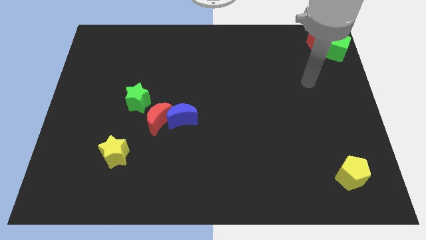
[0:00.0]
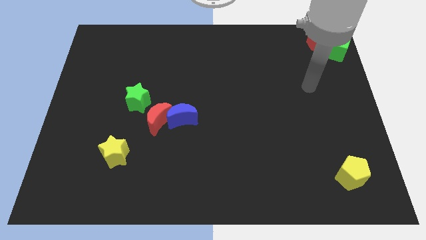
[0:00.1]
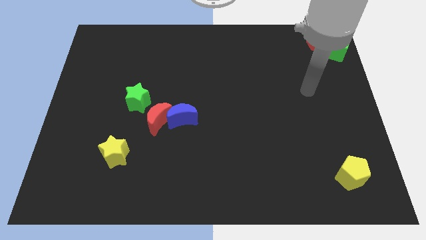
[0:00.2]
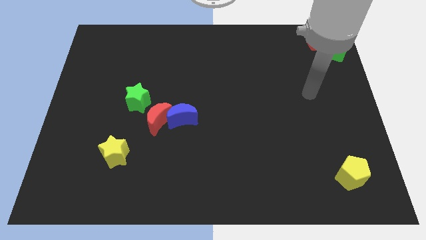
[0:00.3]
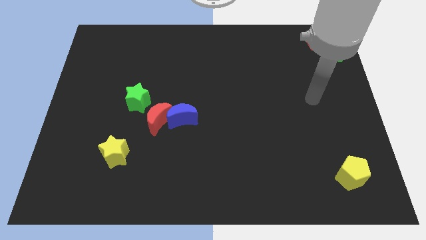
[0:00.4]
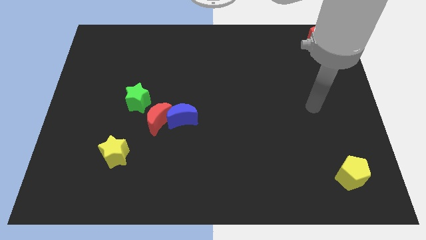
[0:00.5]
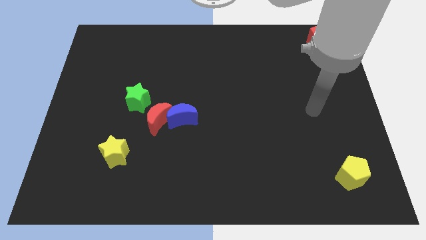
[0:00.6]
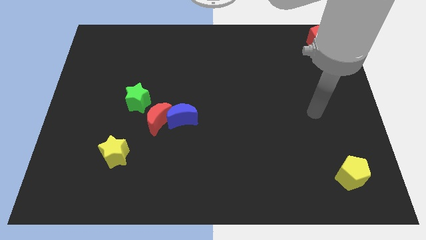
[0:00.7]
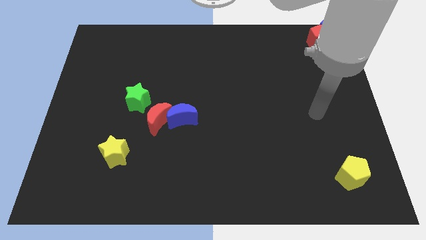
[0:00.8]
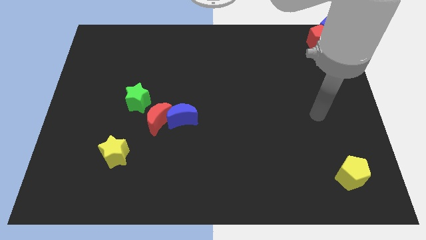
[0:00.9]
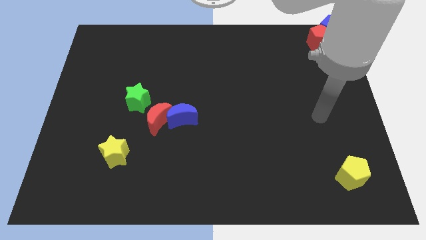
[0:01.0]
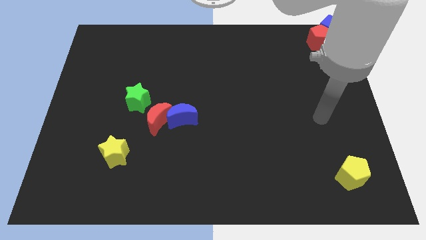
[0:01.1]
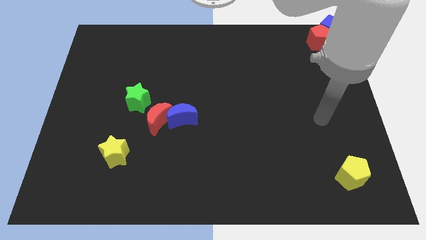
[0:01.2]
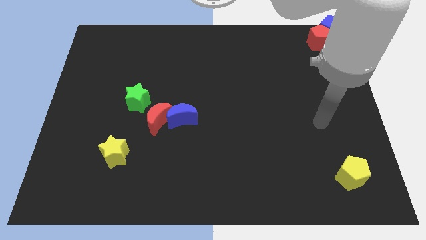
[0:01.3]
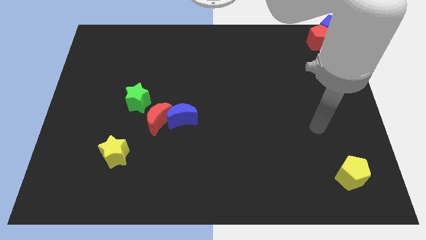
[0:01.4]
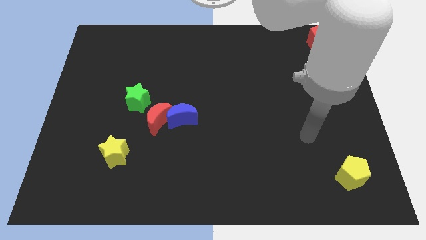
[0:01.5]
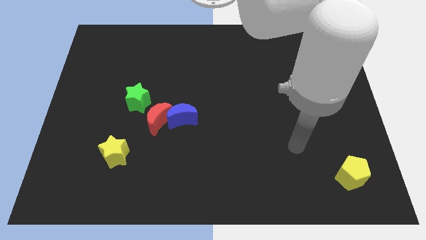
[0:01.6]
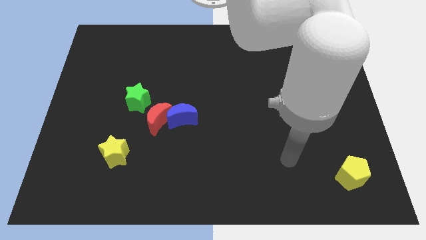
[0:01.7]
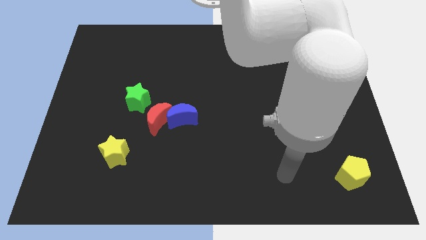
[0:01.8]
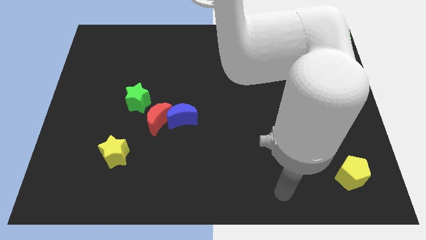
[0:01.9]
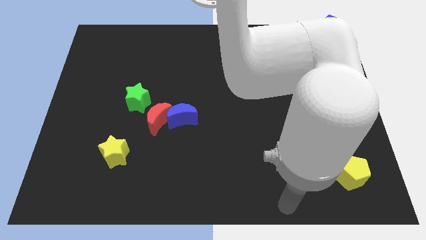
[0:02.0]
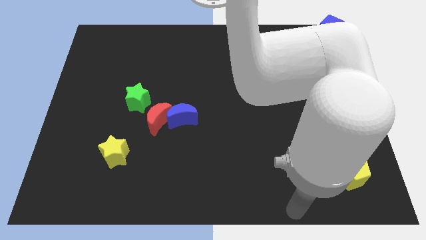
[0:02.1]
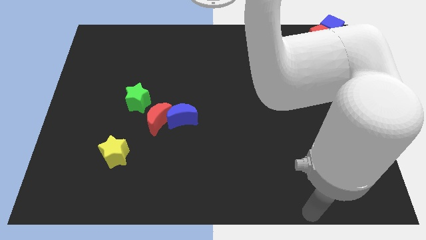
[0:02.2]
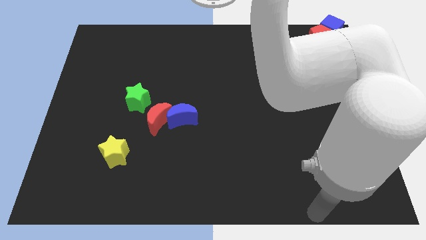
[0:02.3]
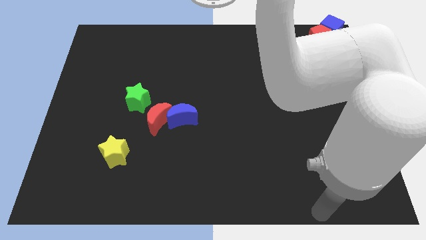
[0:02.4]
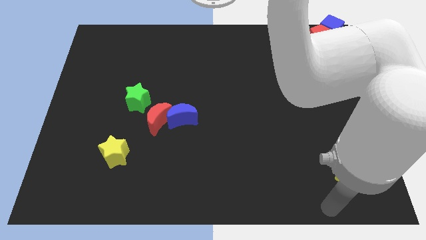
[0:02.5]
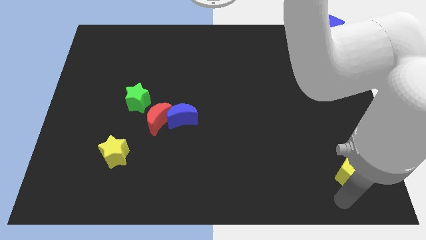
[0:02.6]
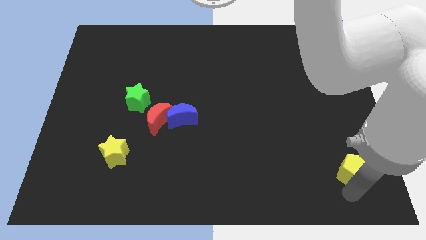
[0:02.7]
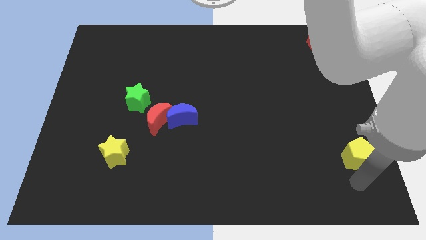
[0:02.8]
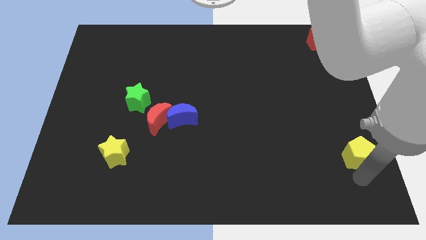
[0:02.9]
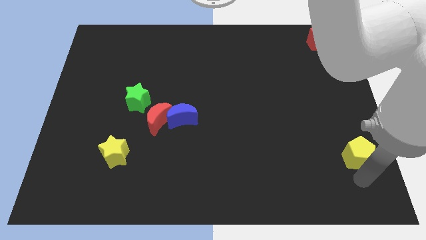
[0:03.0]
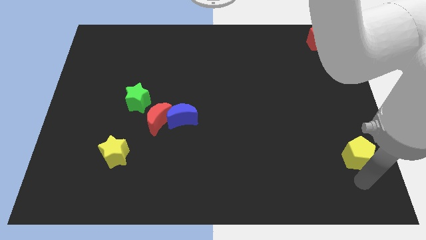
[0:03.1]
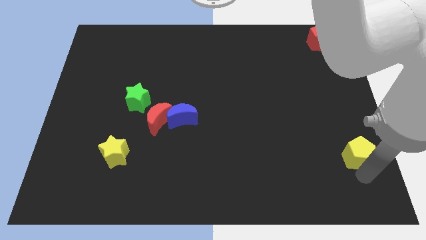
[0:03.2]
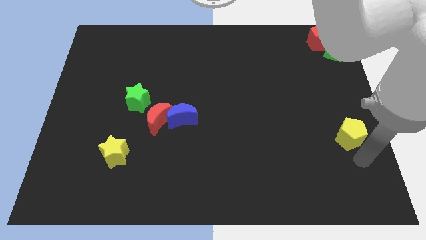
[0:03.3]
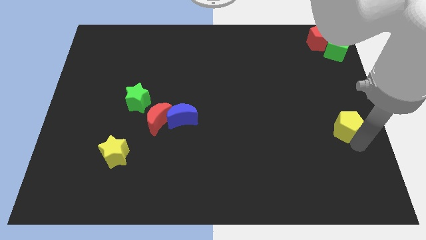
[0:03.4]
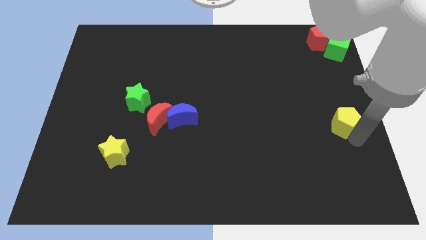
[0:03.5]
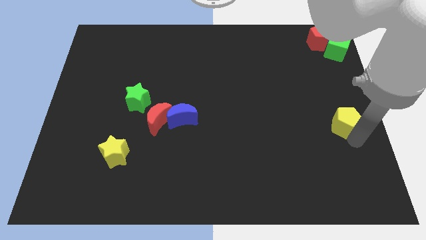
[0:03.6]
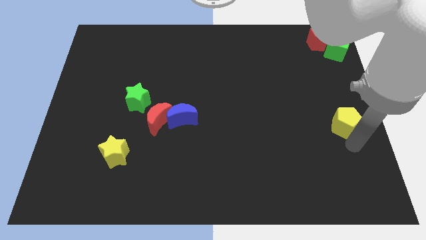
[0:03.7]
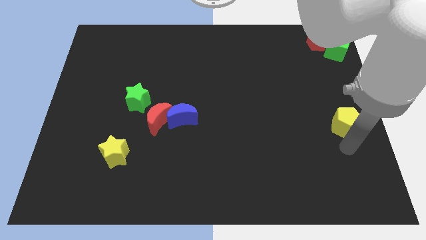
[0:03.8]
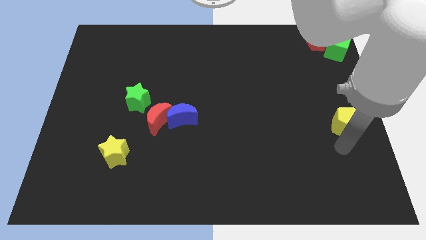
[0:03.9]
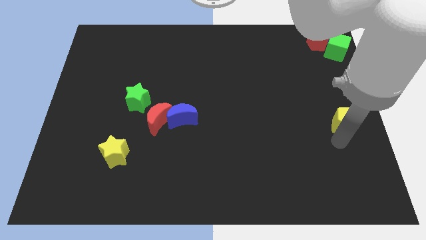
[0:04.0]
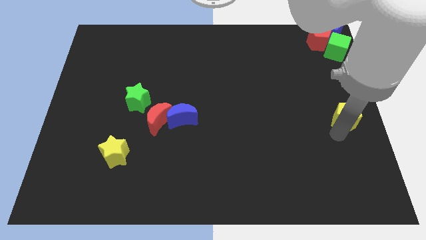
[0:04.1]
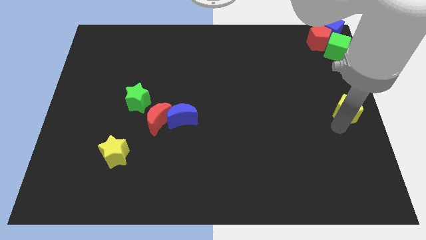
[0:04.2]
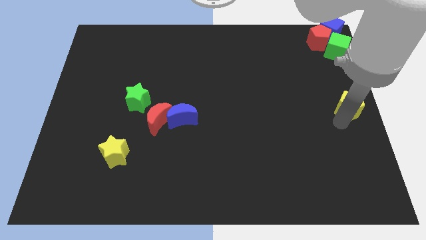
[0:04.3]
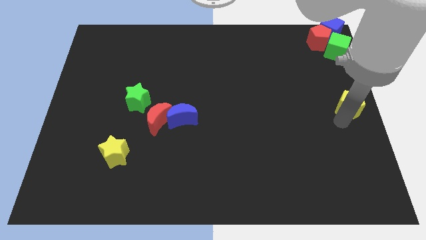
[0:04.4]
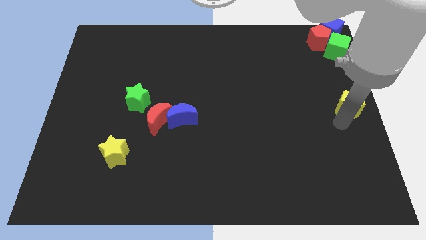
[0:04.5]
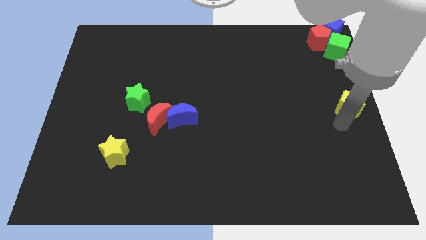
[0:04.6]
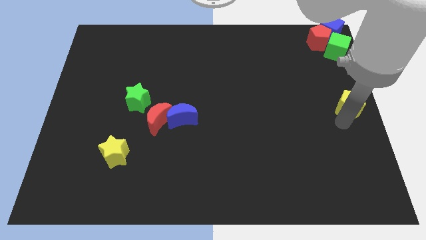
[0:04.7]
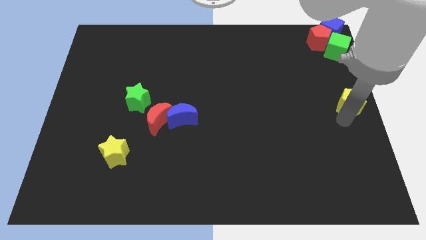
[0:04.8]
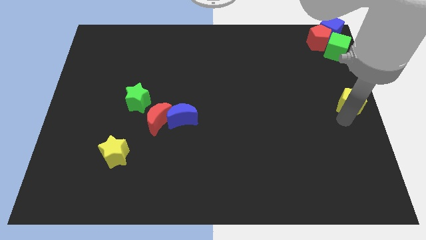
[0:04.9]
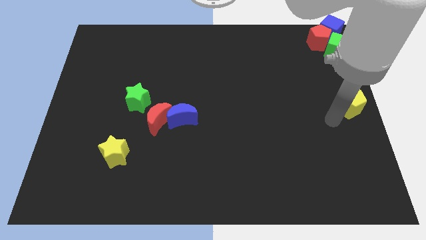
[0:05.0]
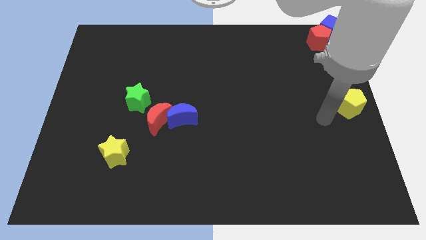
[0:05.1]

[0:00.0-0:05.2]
move yellow pentagon right center of the board

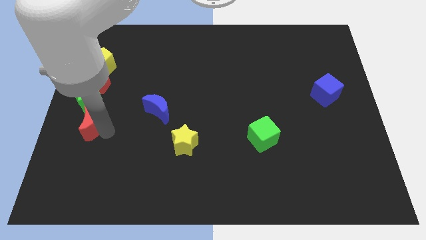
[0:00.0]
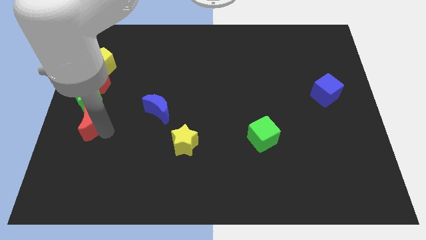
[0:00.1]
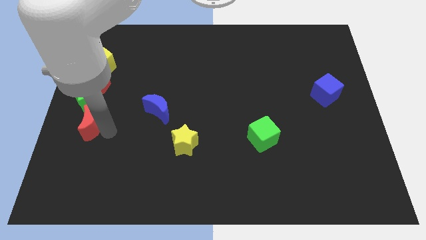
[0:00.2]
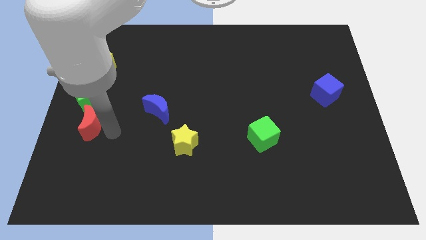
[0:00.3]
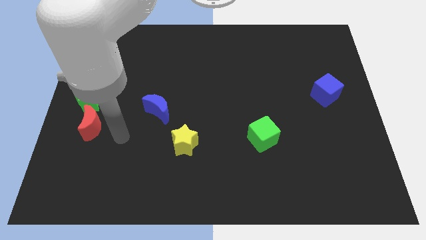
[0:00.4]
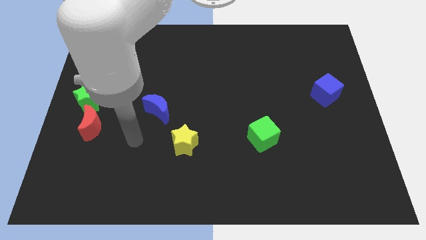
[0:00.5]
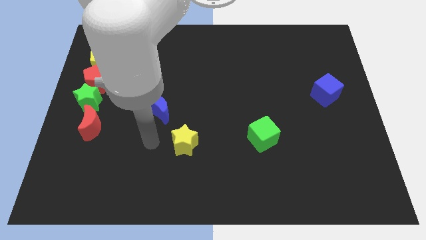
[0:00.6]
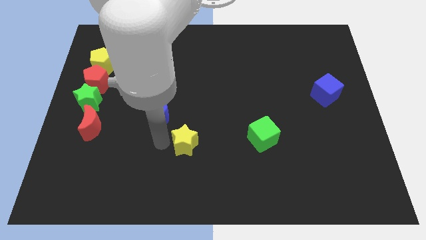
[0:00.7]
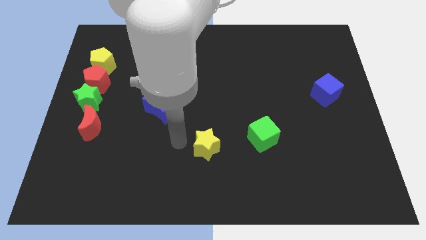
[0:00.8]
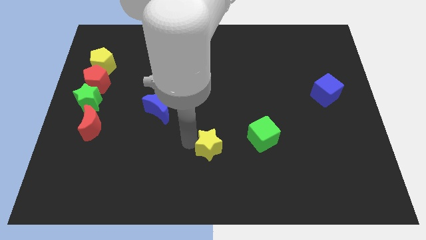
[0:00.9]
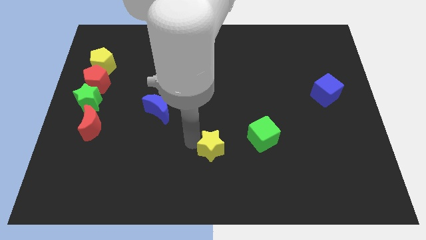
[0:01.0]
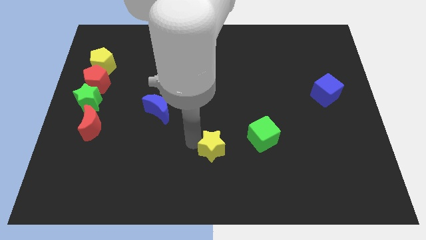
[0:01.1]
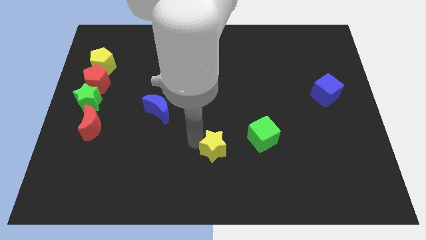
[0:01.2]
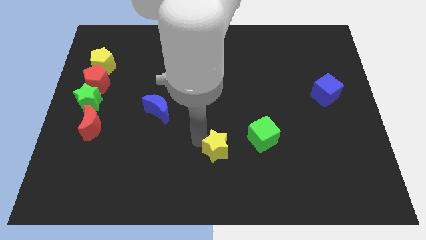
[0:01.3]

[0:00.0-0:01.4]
push the red moon to the bottom of the green star

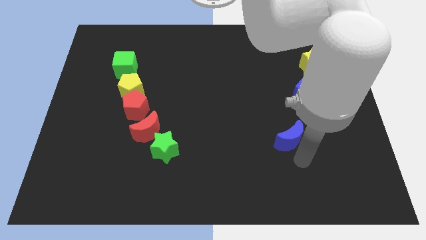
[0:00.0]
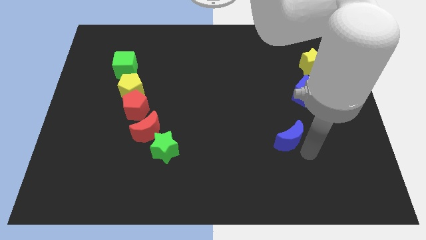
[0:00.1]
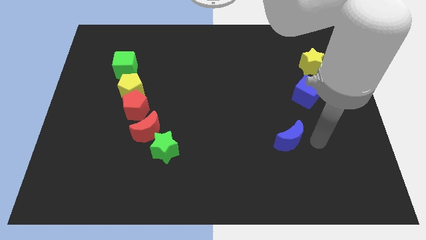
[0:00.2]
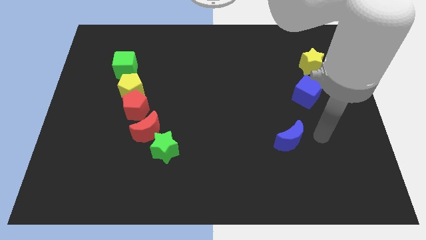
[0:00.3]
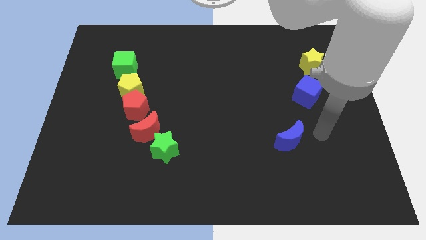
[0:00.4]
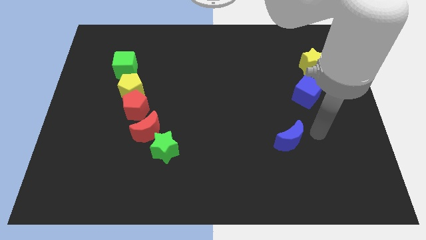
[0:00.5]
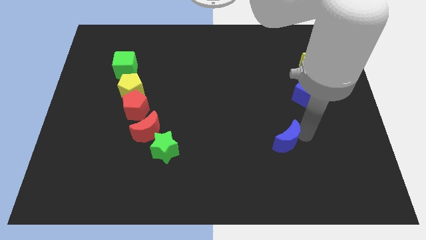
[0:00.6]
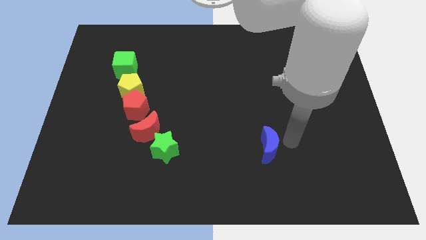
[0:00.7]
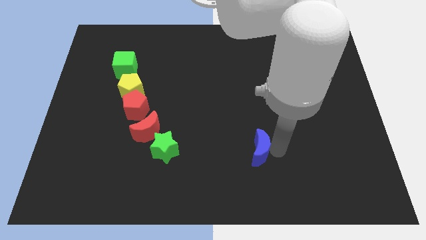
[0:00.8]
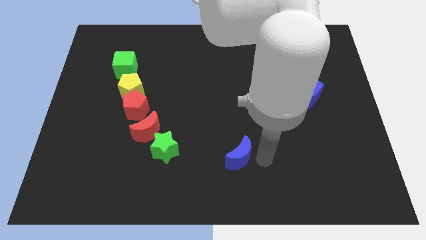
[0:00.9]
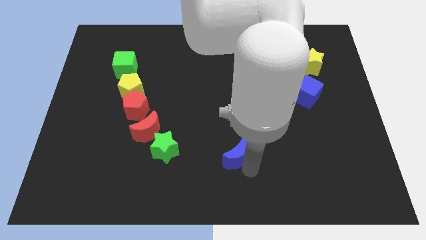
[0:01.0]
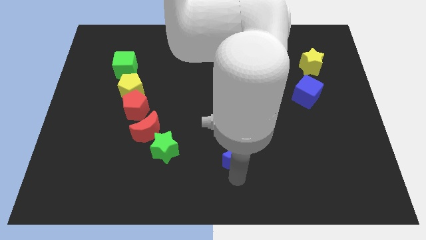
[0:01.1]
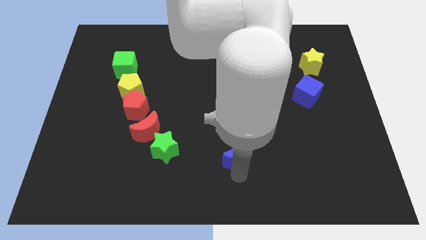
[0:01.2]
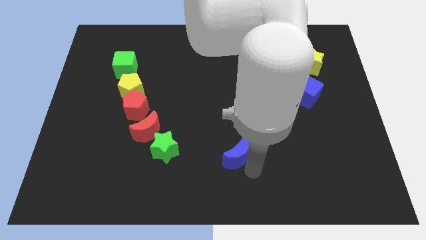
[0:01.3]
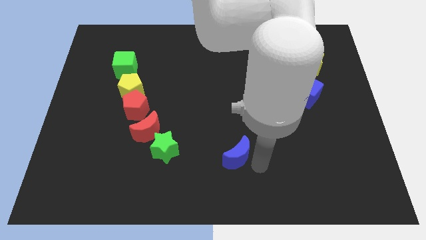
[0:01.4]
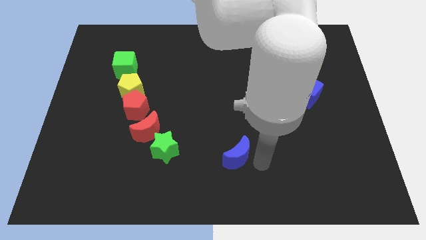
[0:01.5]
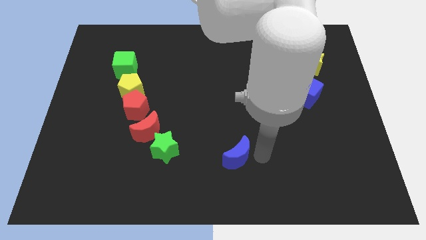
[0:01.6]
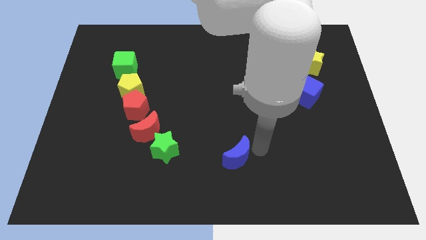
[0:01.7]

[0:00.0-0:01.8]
push blue crescent slightly towards left side

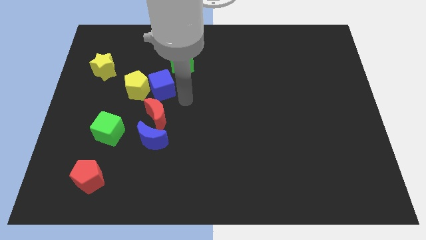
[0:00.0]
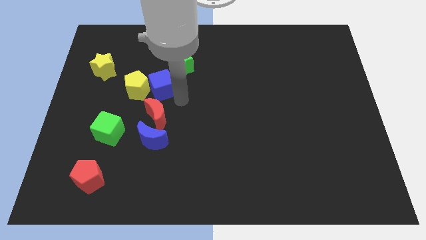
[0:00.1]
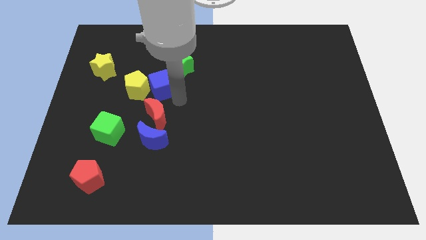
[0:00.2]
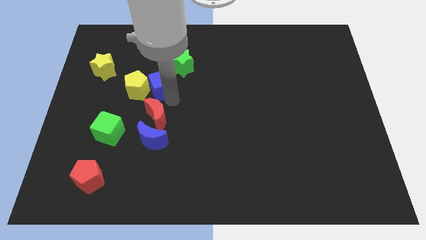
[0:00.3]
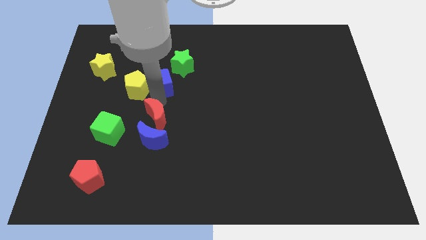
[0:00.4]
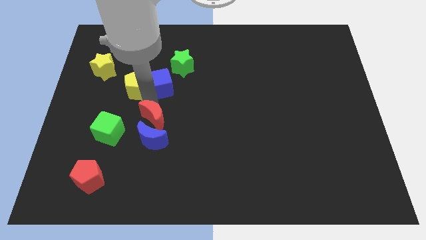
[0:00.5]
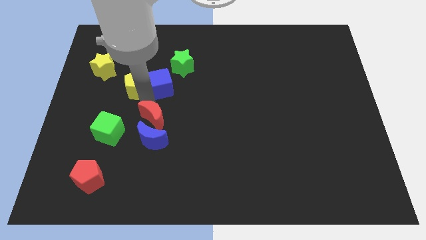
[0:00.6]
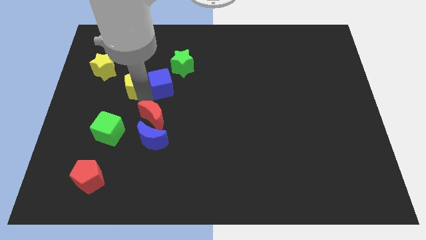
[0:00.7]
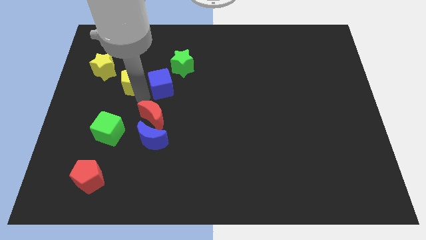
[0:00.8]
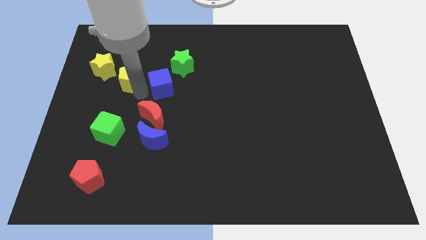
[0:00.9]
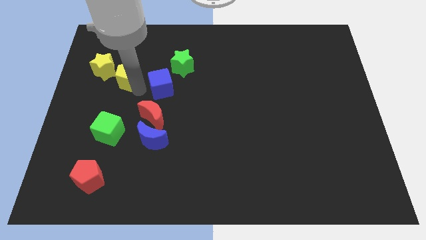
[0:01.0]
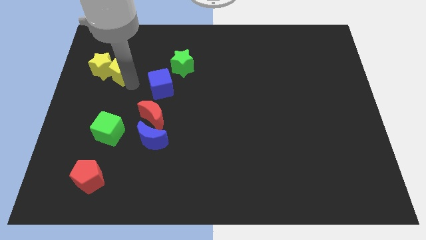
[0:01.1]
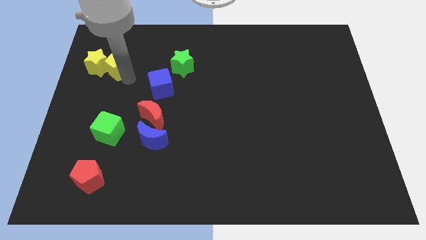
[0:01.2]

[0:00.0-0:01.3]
move the yellow pentagon into the yellow star
